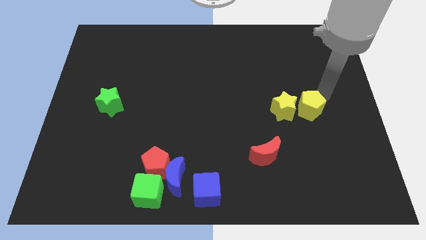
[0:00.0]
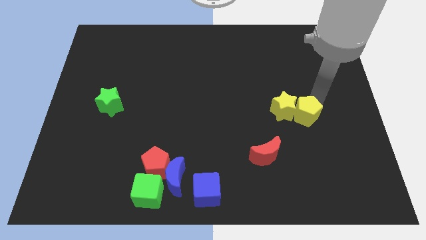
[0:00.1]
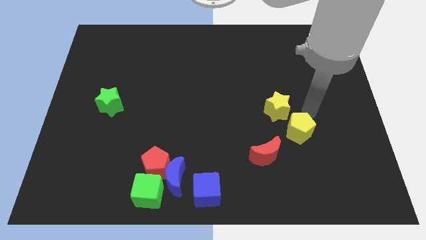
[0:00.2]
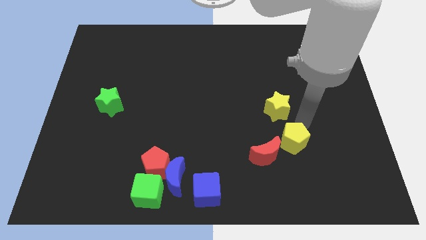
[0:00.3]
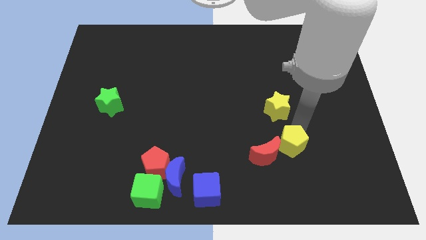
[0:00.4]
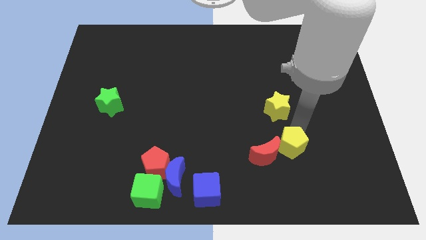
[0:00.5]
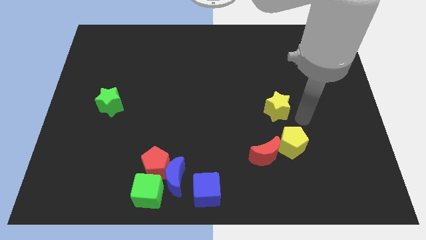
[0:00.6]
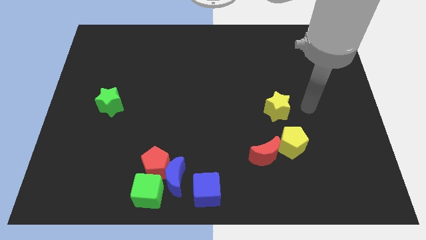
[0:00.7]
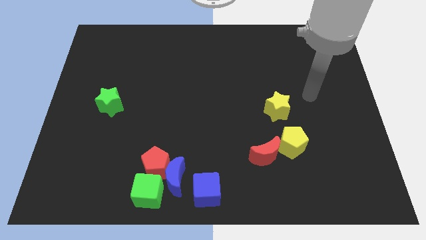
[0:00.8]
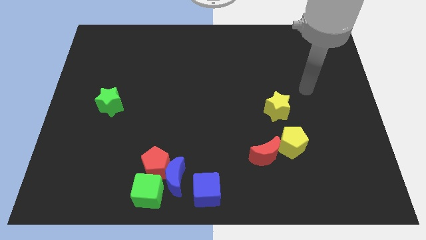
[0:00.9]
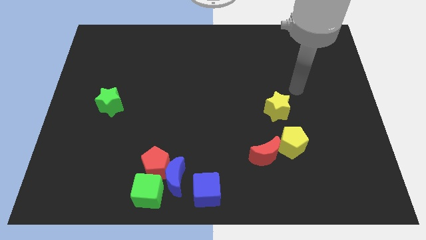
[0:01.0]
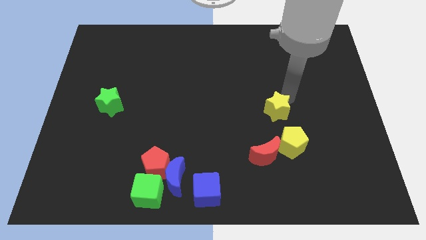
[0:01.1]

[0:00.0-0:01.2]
separate yellow pentagon from yellow star

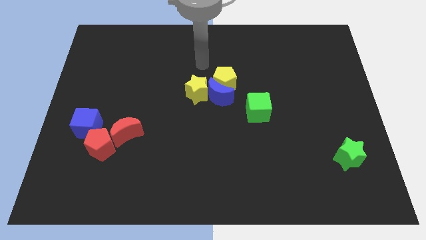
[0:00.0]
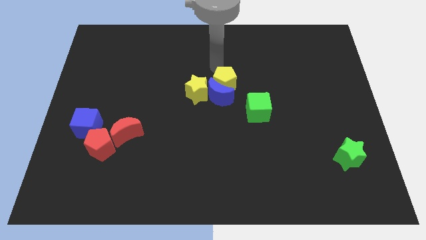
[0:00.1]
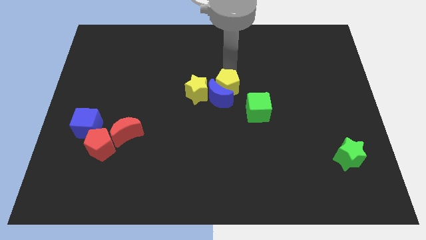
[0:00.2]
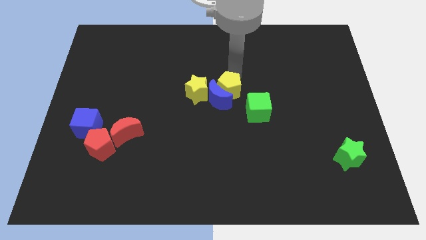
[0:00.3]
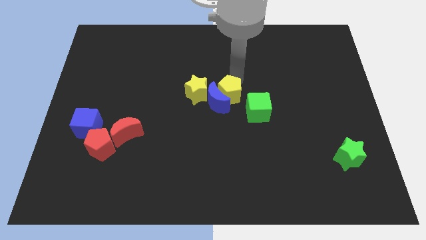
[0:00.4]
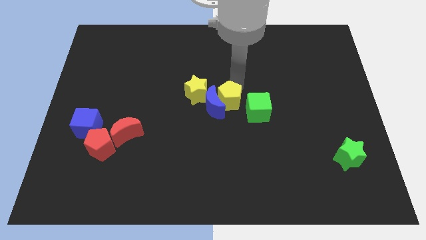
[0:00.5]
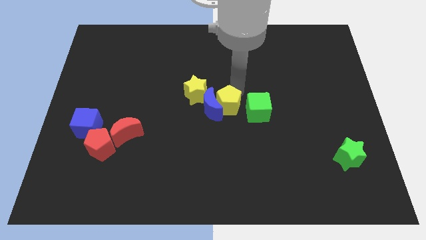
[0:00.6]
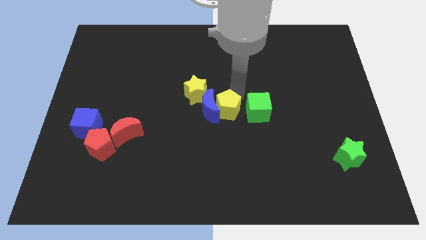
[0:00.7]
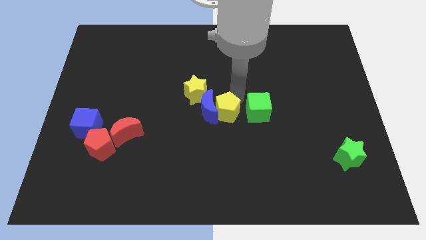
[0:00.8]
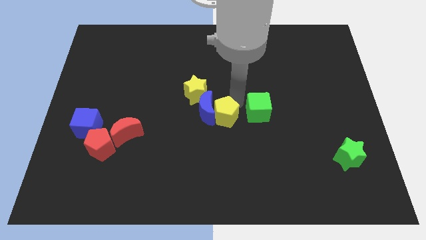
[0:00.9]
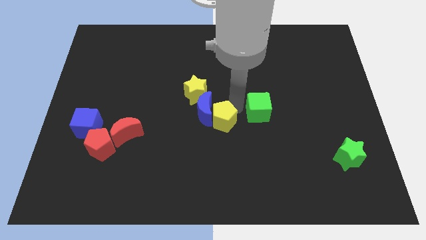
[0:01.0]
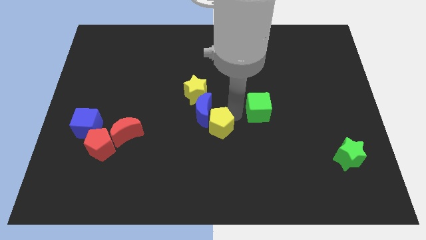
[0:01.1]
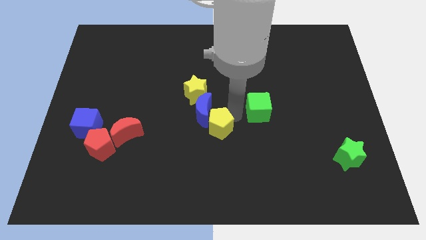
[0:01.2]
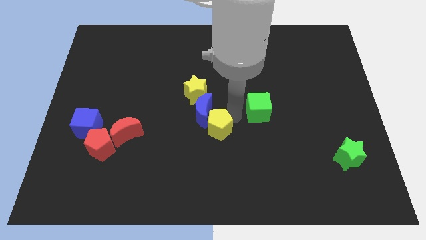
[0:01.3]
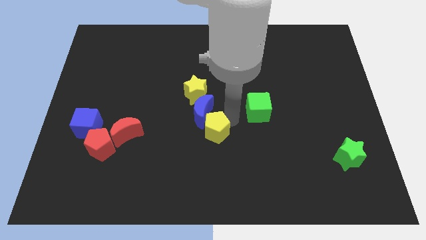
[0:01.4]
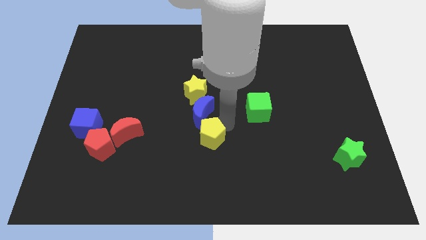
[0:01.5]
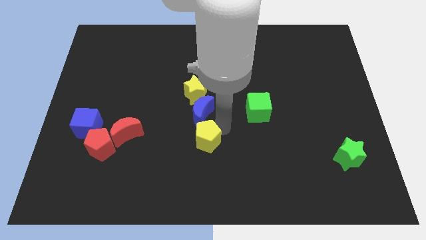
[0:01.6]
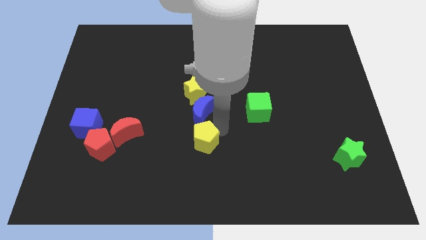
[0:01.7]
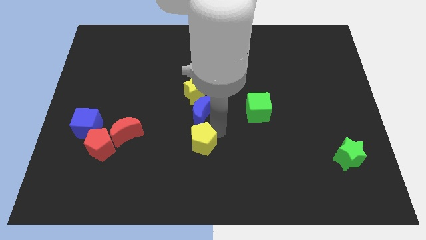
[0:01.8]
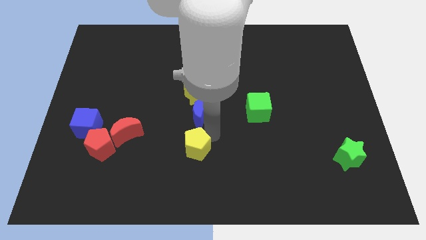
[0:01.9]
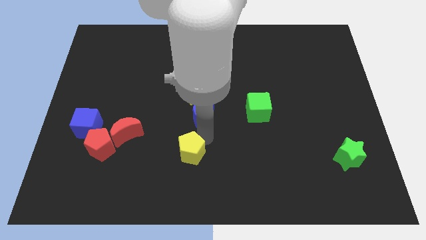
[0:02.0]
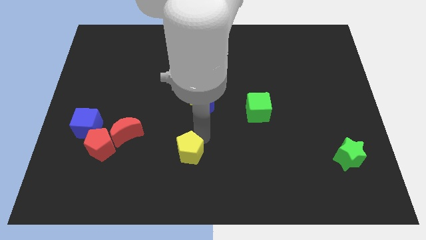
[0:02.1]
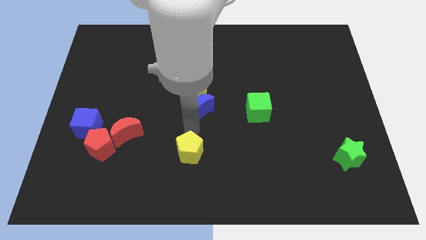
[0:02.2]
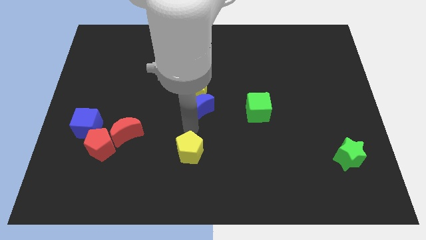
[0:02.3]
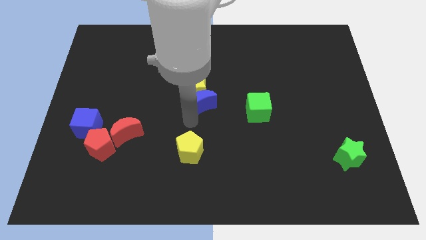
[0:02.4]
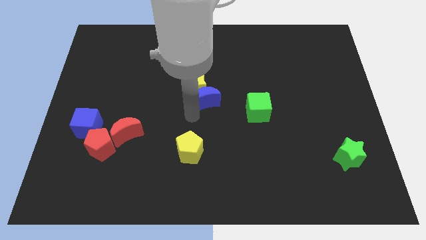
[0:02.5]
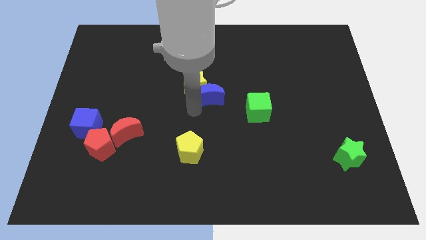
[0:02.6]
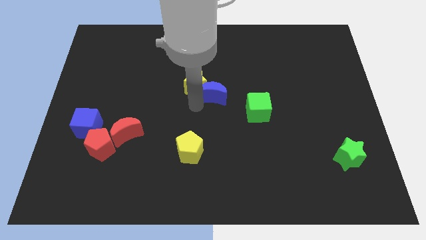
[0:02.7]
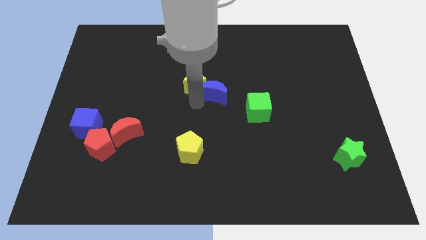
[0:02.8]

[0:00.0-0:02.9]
separate the yellow pentagon from the blue moon

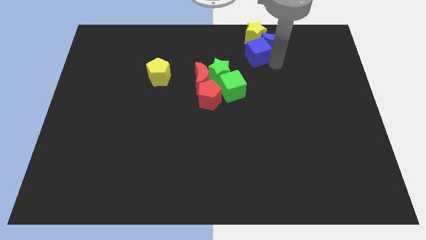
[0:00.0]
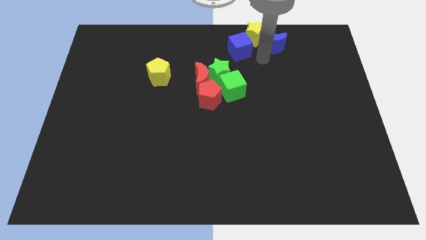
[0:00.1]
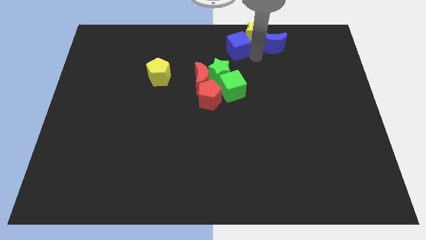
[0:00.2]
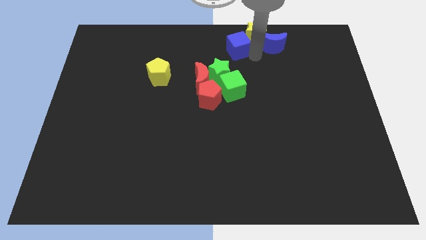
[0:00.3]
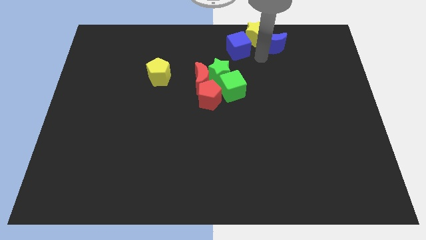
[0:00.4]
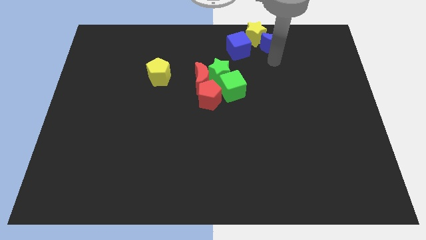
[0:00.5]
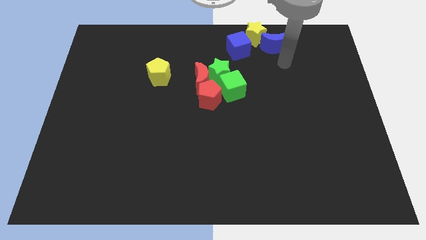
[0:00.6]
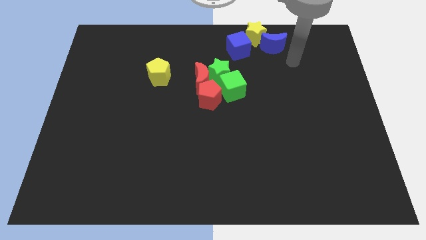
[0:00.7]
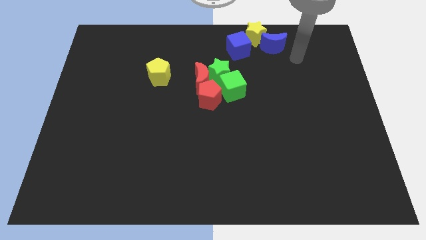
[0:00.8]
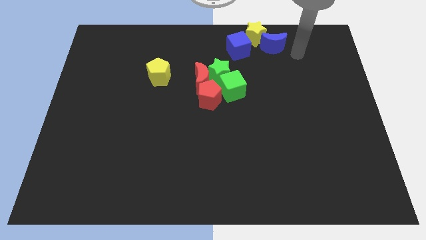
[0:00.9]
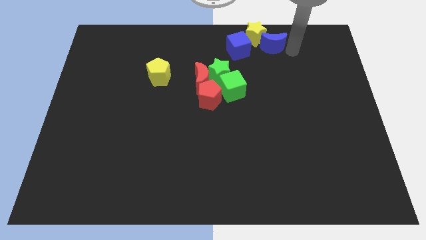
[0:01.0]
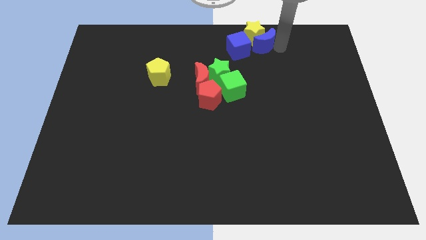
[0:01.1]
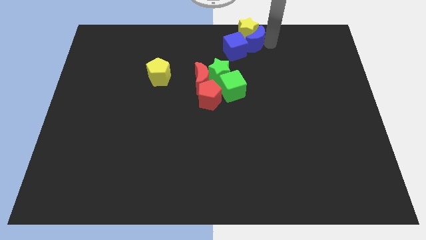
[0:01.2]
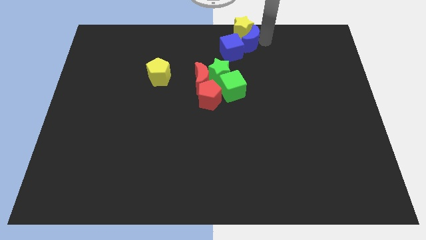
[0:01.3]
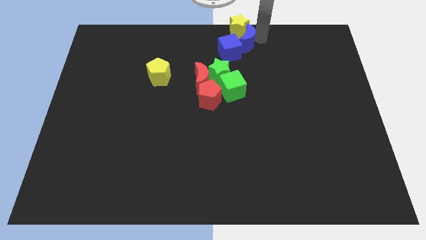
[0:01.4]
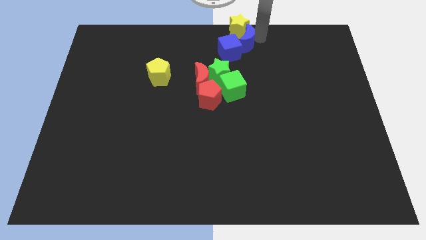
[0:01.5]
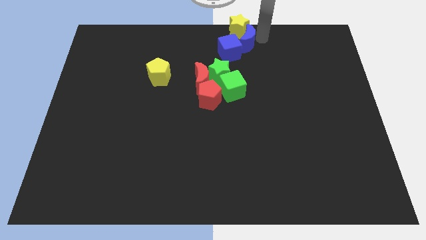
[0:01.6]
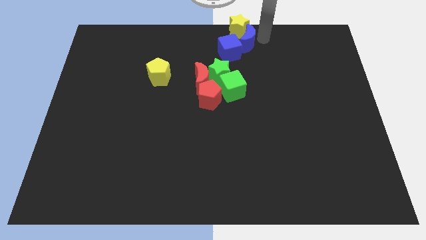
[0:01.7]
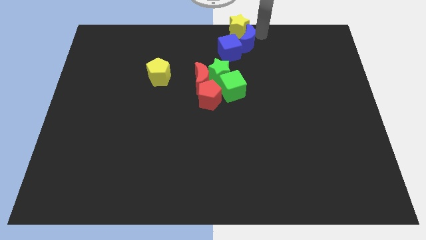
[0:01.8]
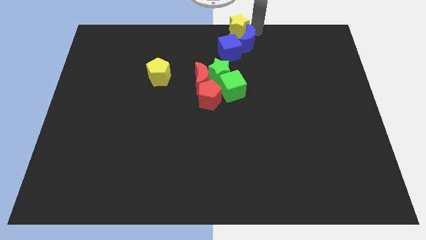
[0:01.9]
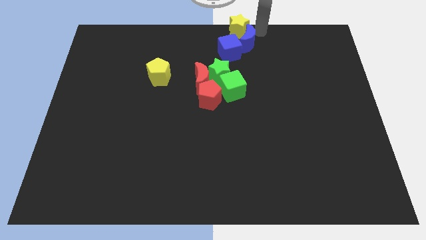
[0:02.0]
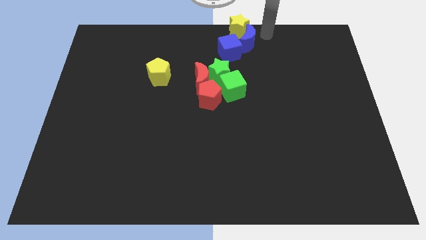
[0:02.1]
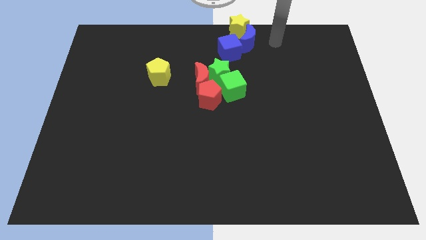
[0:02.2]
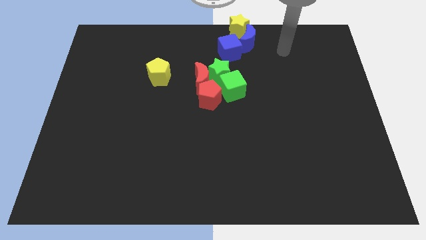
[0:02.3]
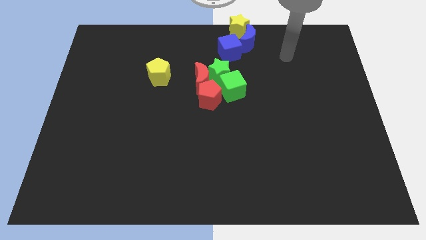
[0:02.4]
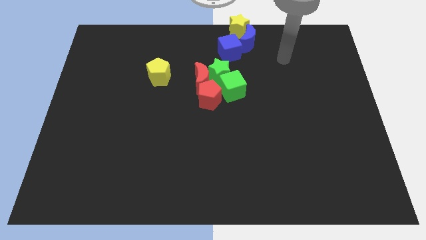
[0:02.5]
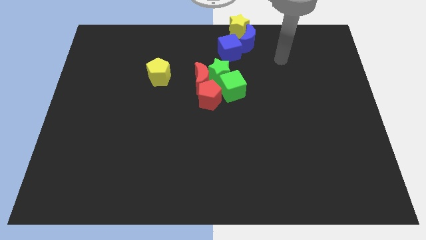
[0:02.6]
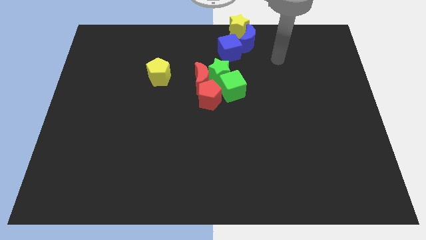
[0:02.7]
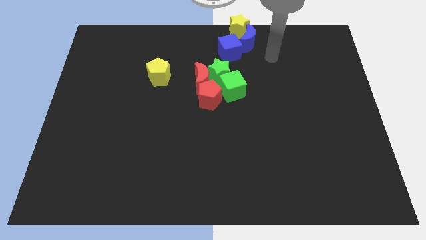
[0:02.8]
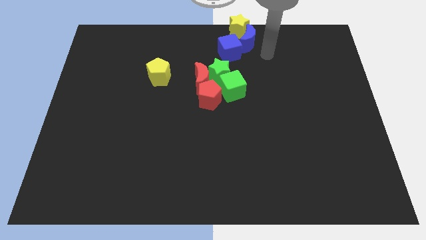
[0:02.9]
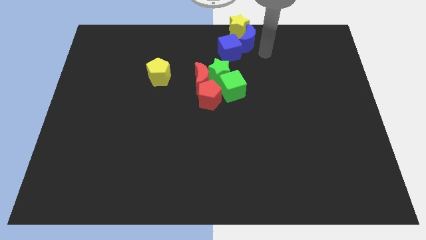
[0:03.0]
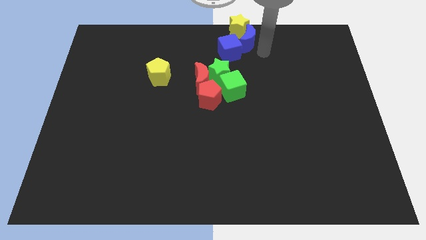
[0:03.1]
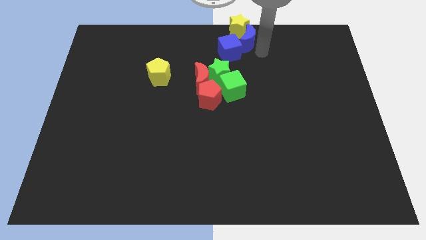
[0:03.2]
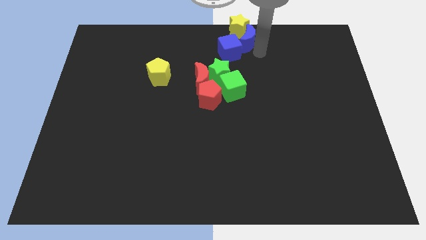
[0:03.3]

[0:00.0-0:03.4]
push the blue cube slightly towards the left on the top along with the yellow star and blue crescent

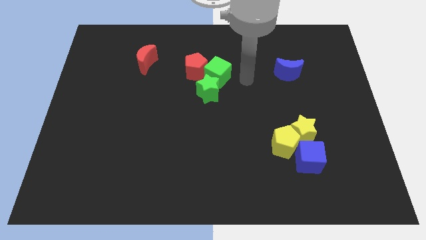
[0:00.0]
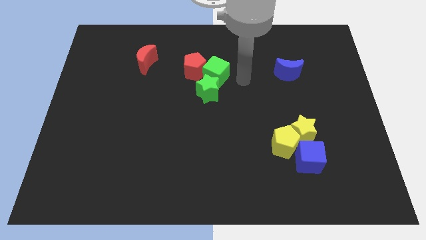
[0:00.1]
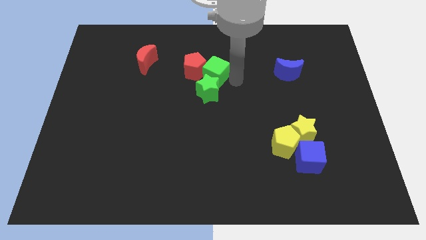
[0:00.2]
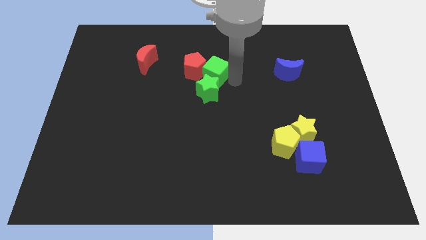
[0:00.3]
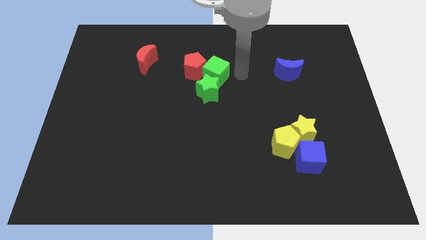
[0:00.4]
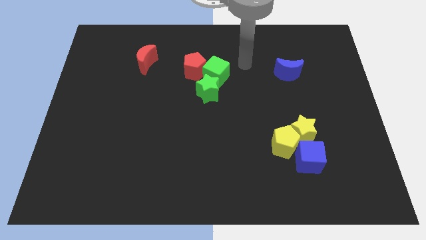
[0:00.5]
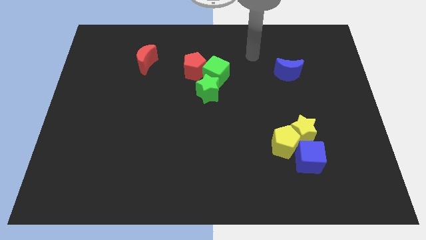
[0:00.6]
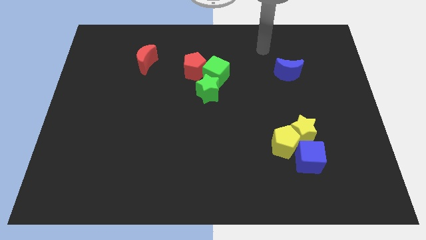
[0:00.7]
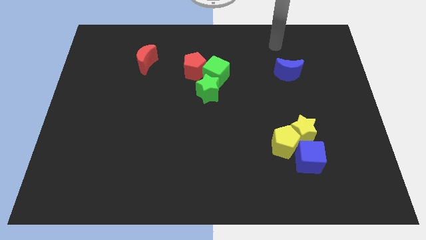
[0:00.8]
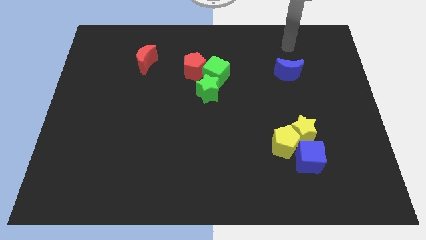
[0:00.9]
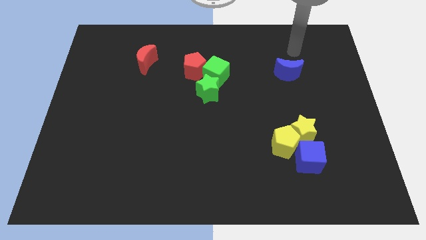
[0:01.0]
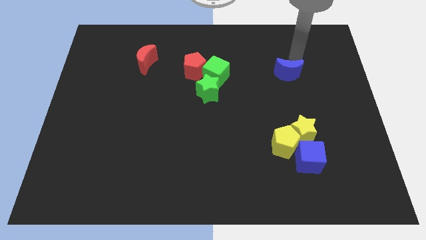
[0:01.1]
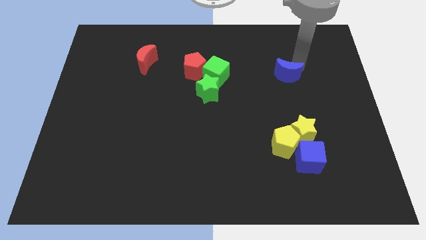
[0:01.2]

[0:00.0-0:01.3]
move your arm away from the green cube

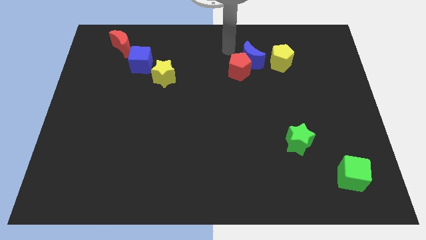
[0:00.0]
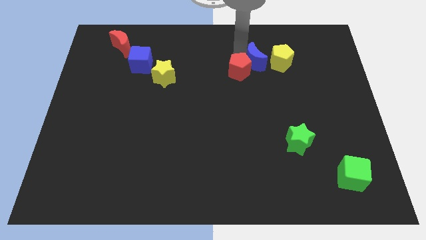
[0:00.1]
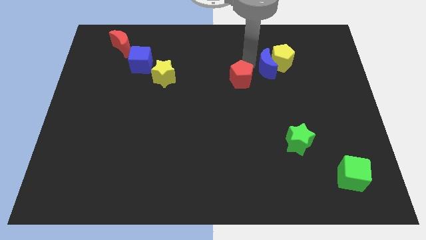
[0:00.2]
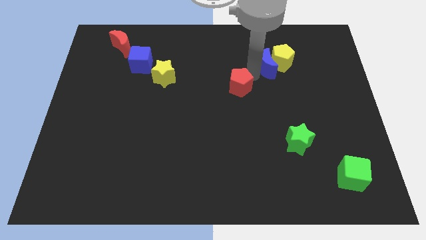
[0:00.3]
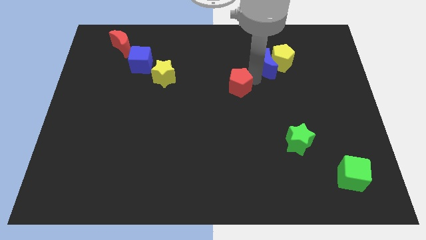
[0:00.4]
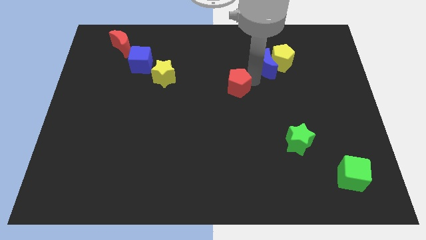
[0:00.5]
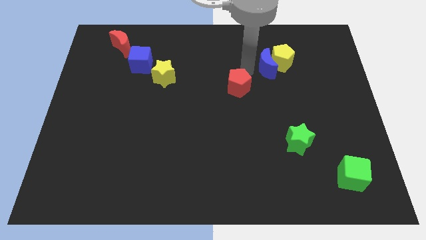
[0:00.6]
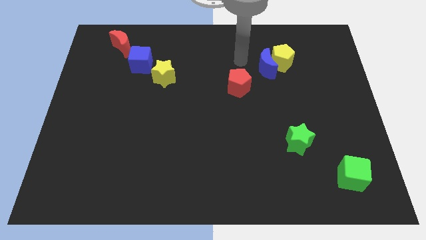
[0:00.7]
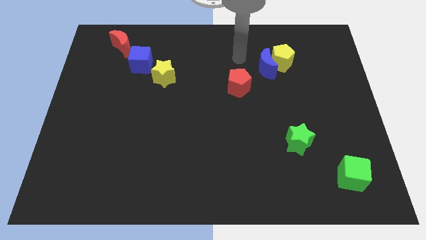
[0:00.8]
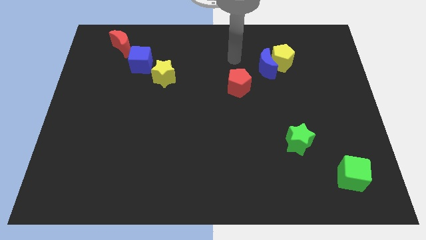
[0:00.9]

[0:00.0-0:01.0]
separate the red pentagon and the blue crescent from each other
